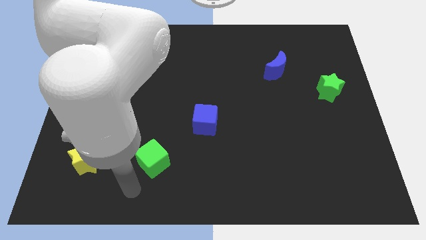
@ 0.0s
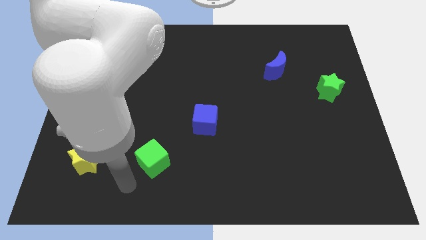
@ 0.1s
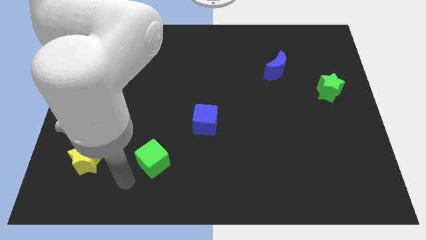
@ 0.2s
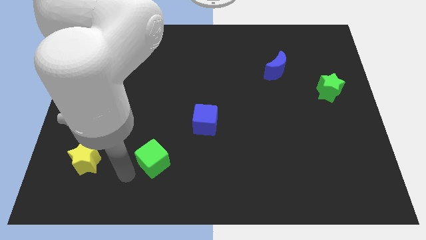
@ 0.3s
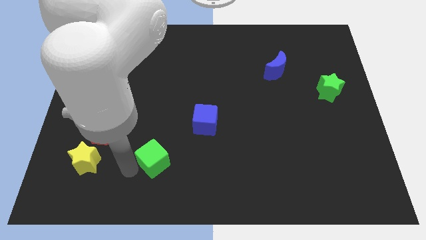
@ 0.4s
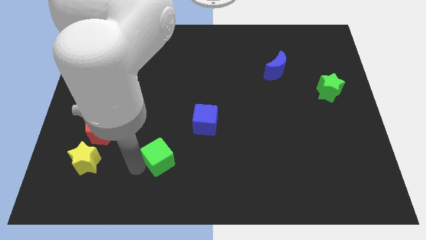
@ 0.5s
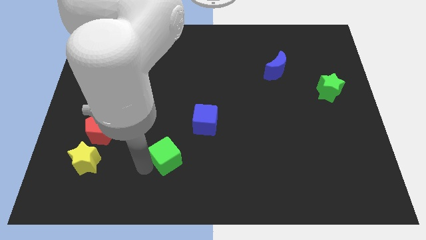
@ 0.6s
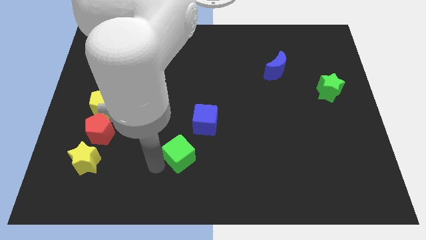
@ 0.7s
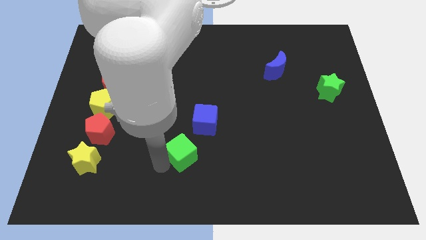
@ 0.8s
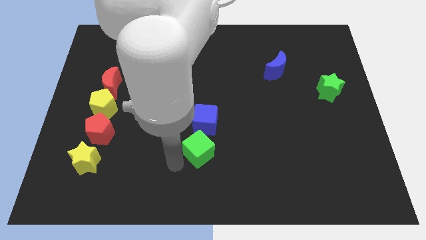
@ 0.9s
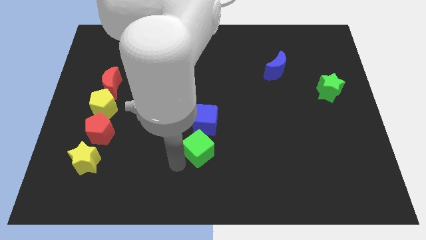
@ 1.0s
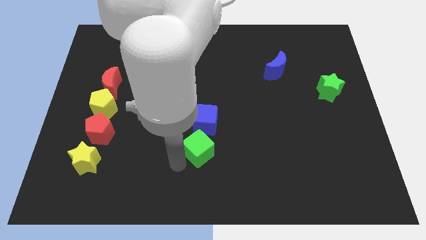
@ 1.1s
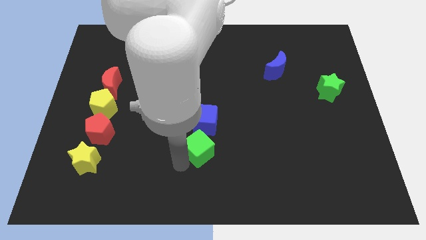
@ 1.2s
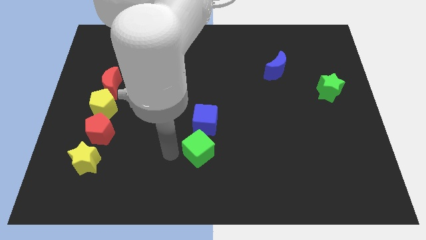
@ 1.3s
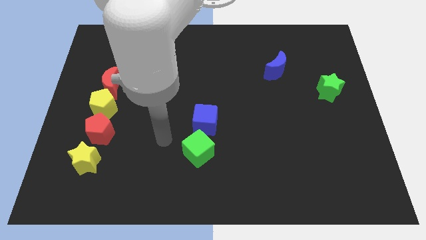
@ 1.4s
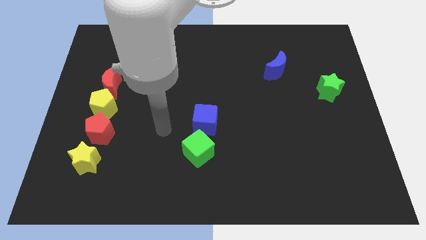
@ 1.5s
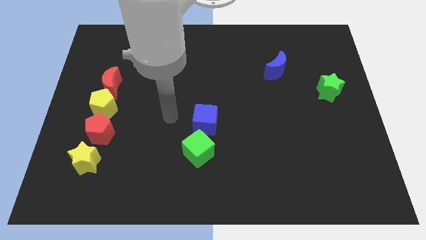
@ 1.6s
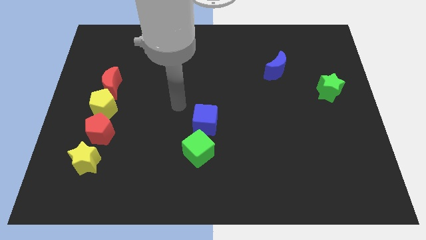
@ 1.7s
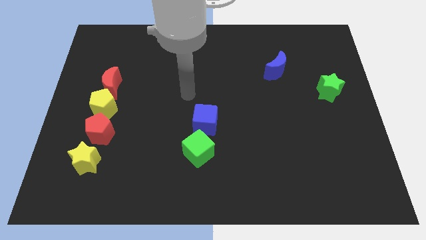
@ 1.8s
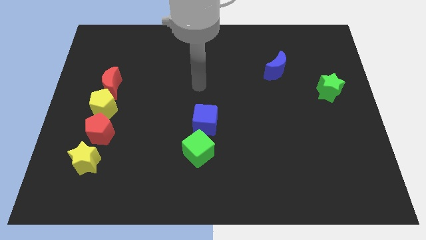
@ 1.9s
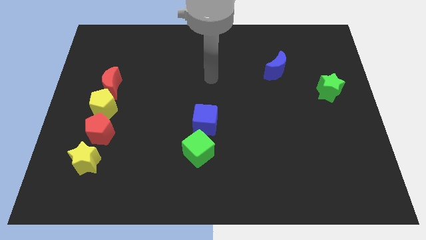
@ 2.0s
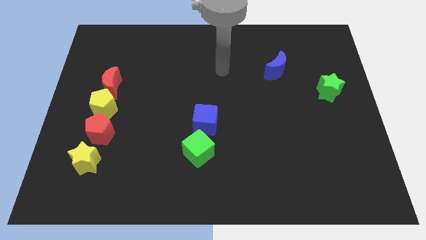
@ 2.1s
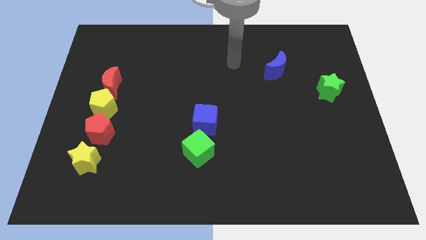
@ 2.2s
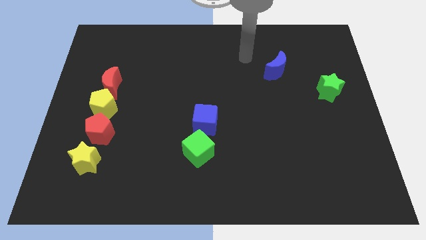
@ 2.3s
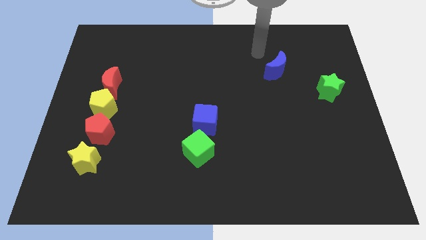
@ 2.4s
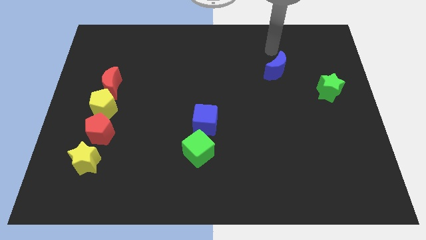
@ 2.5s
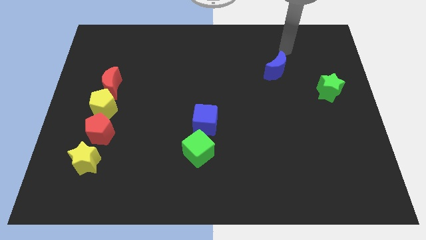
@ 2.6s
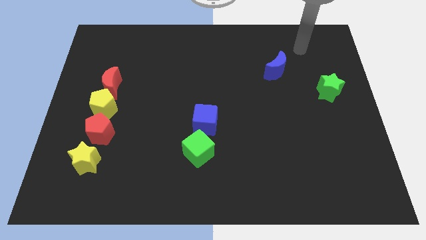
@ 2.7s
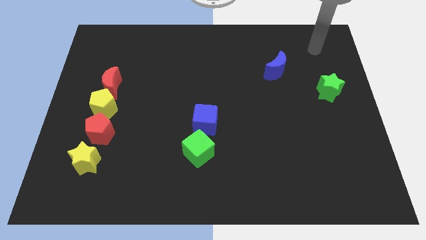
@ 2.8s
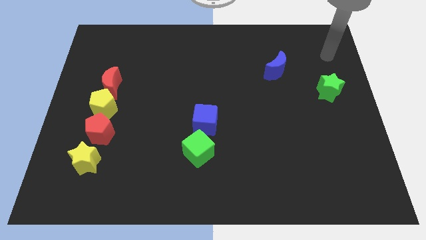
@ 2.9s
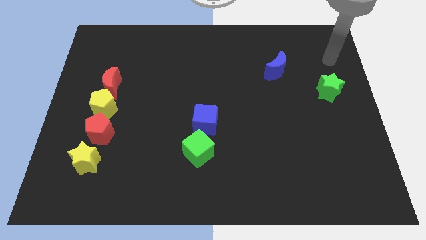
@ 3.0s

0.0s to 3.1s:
move the green cube below the blue cube

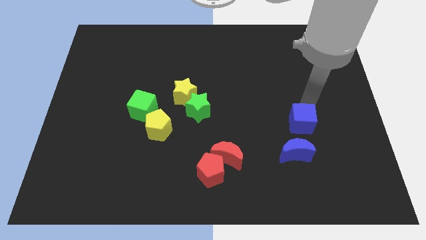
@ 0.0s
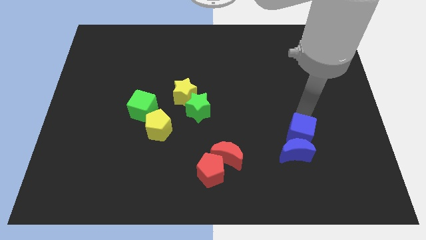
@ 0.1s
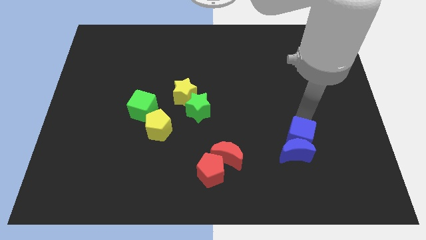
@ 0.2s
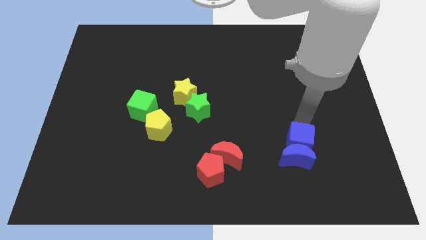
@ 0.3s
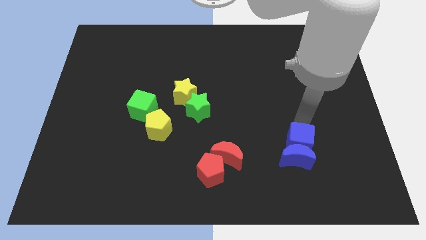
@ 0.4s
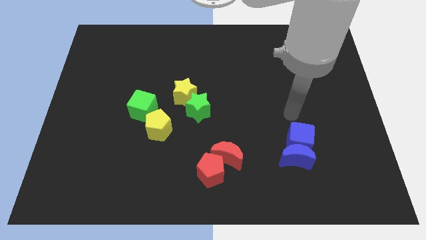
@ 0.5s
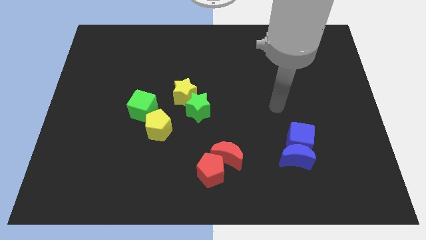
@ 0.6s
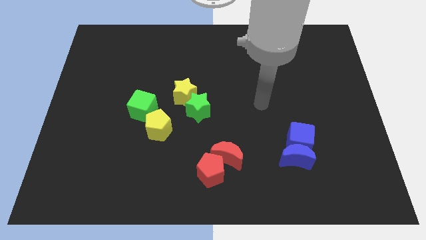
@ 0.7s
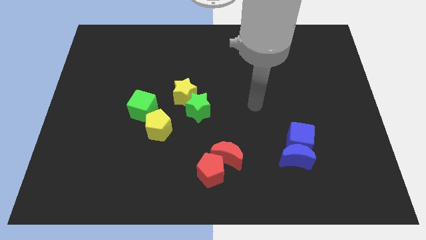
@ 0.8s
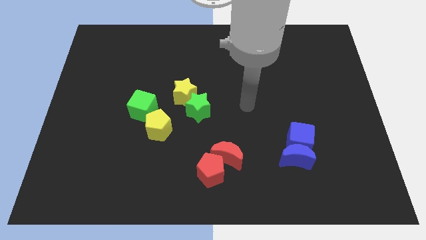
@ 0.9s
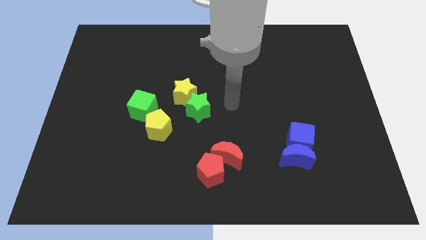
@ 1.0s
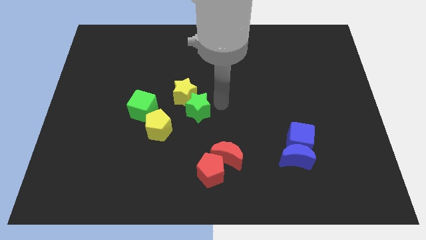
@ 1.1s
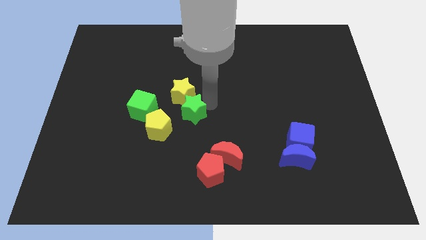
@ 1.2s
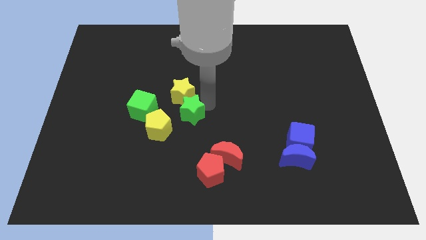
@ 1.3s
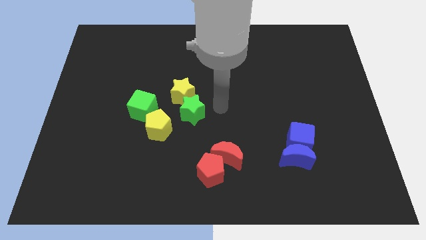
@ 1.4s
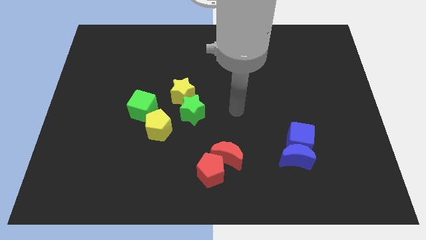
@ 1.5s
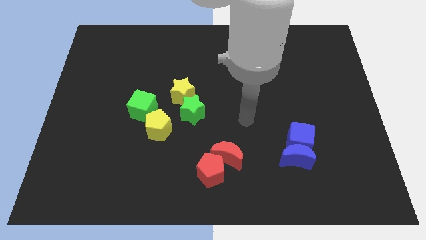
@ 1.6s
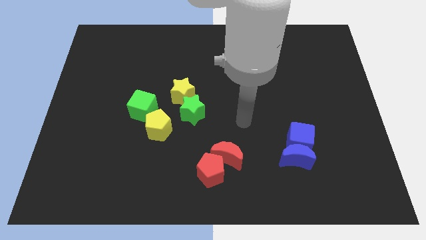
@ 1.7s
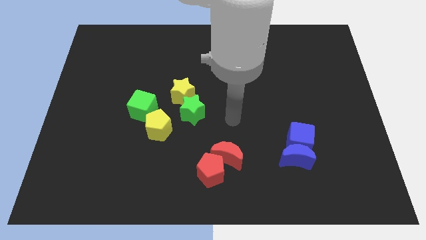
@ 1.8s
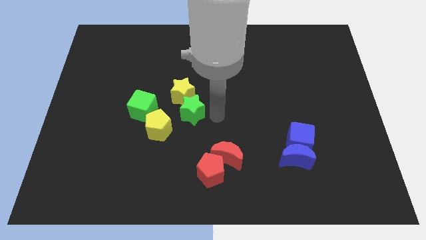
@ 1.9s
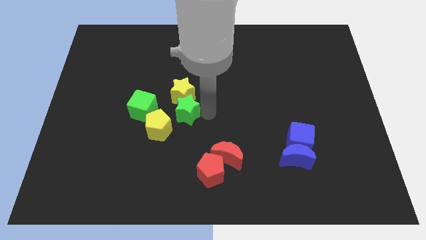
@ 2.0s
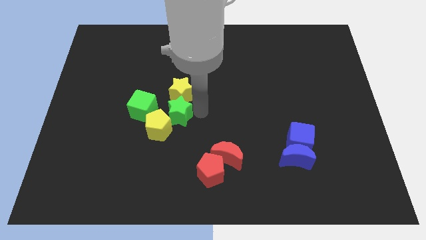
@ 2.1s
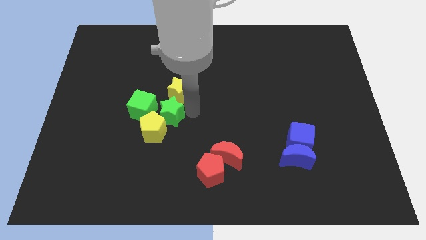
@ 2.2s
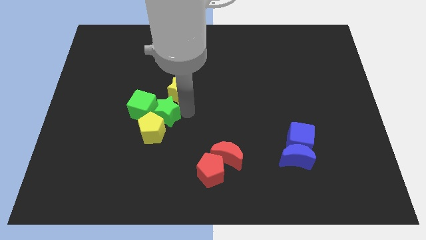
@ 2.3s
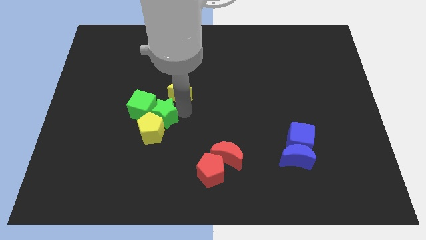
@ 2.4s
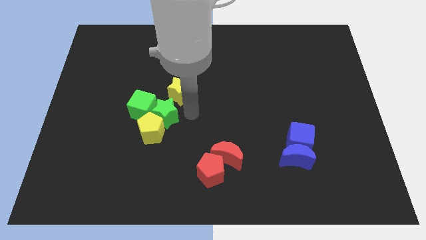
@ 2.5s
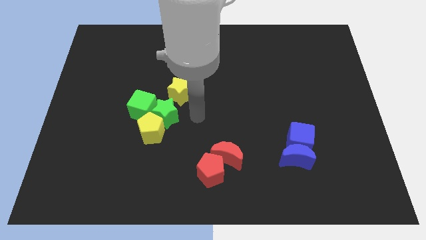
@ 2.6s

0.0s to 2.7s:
push the green star into the green cube

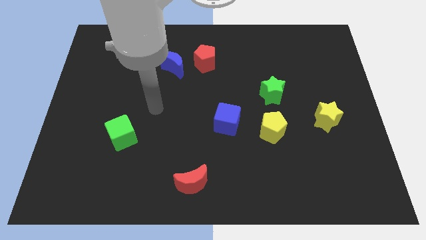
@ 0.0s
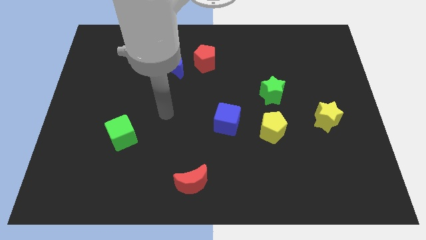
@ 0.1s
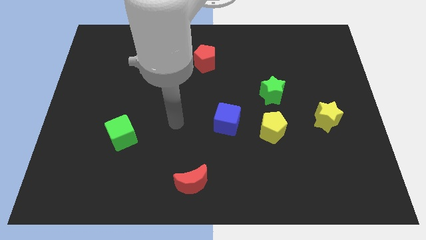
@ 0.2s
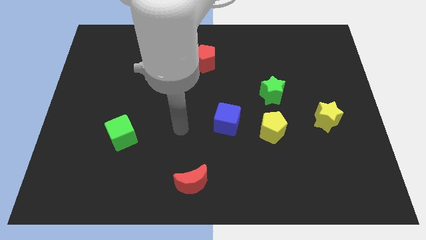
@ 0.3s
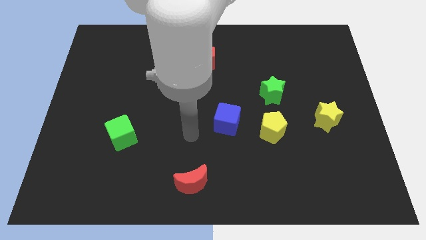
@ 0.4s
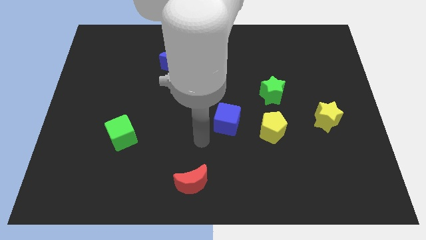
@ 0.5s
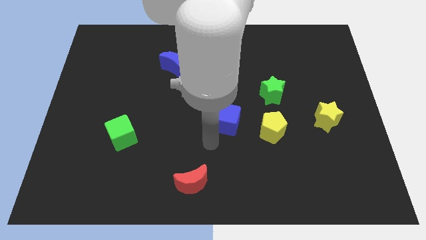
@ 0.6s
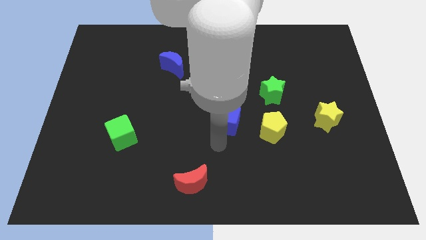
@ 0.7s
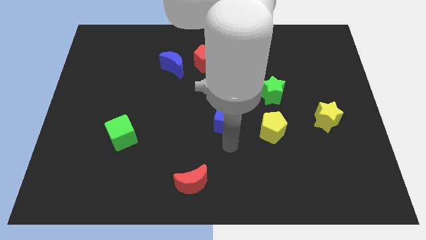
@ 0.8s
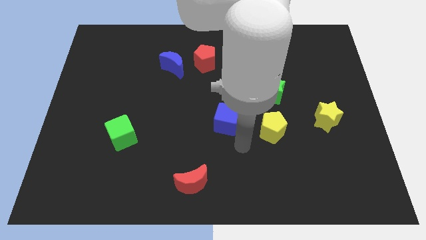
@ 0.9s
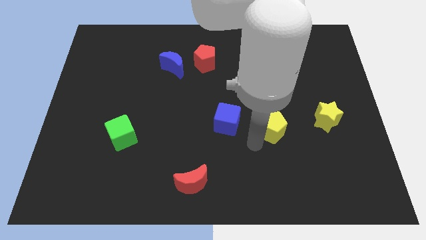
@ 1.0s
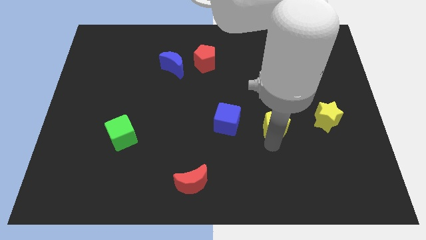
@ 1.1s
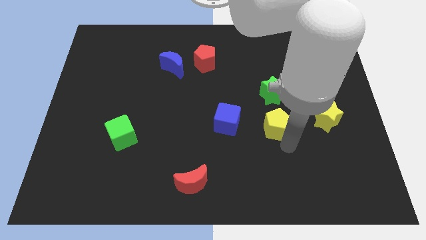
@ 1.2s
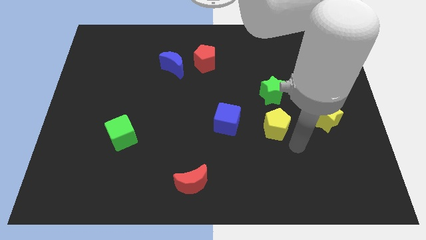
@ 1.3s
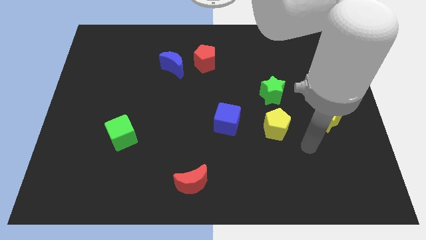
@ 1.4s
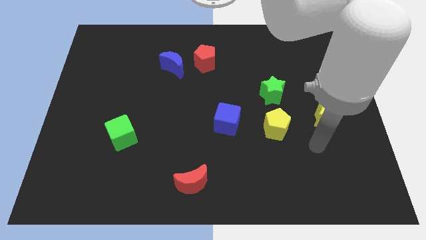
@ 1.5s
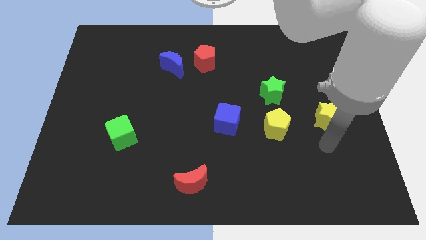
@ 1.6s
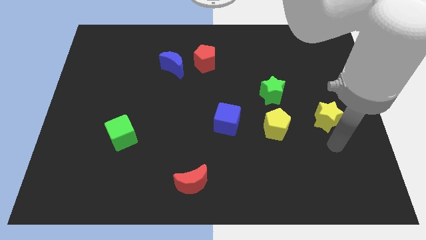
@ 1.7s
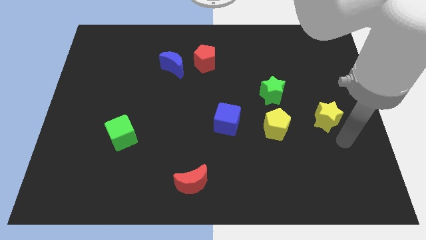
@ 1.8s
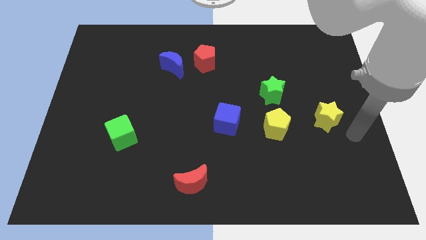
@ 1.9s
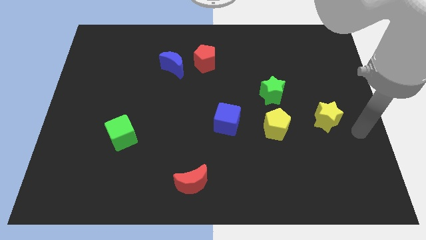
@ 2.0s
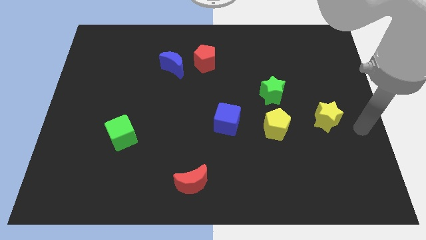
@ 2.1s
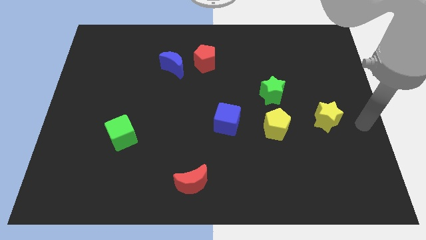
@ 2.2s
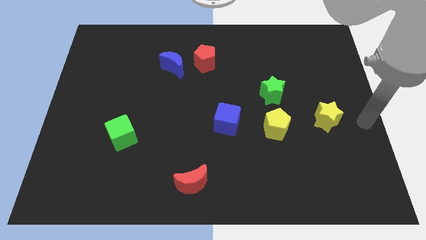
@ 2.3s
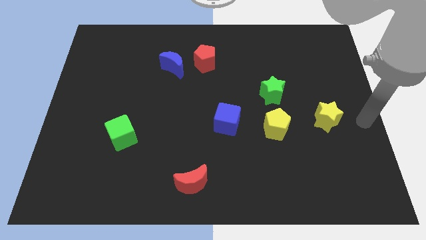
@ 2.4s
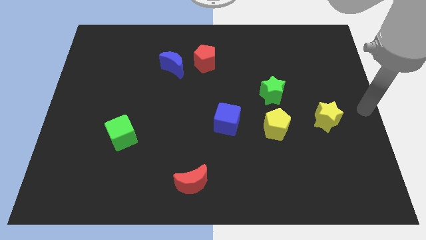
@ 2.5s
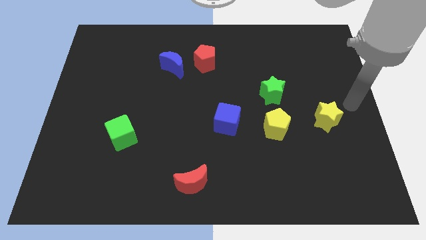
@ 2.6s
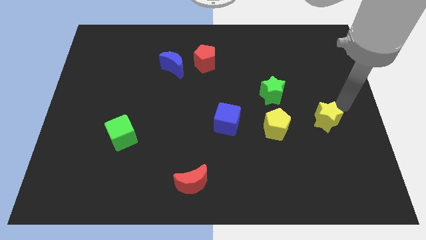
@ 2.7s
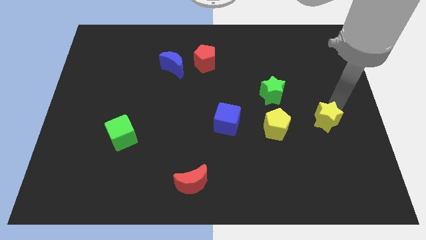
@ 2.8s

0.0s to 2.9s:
move your arm to the yellow star

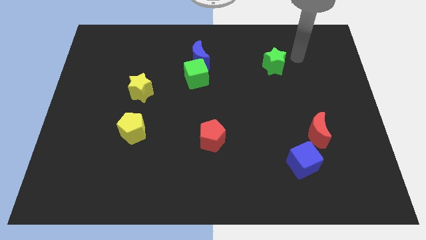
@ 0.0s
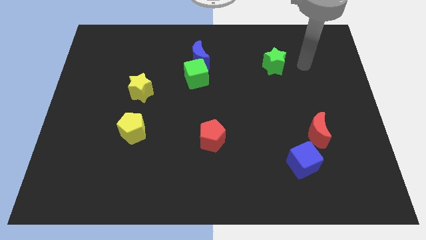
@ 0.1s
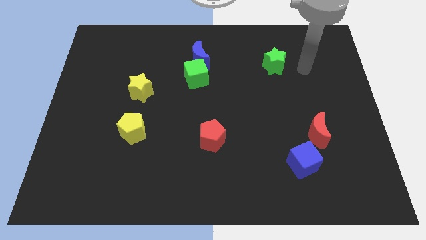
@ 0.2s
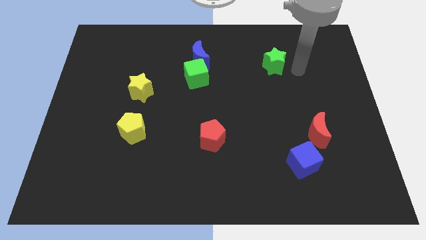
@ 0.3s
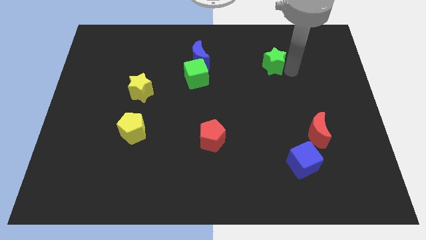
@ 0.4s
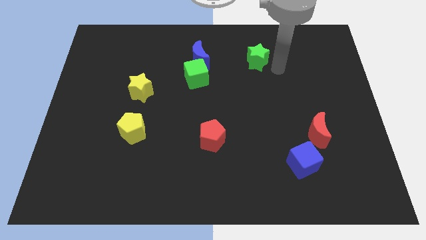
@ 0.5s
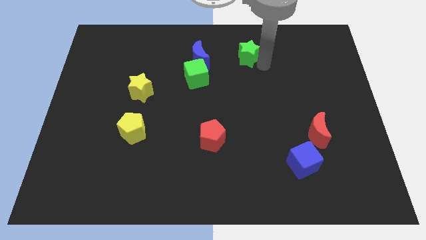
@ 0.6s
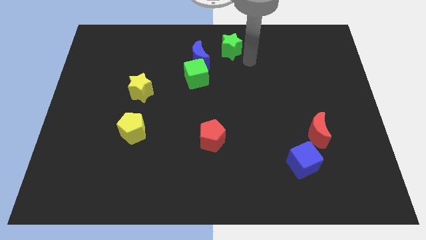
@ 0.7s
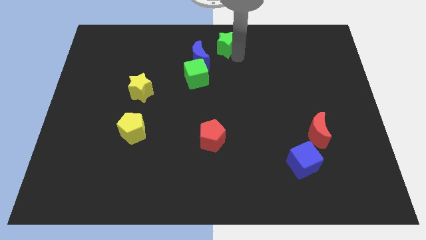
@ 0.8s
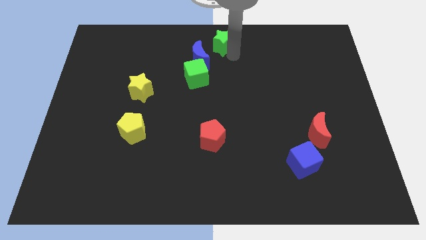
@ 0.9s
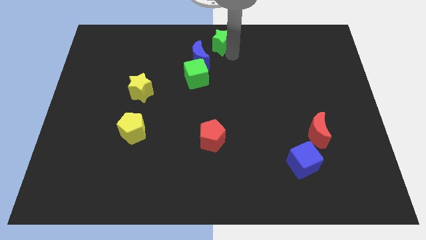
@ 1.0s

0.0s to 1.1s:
move green star to center top
